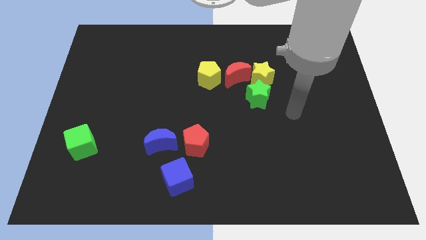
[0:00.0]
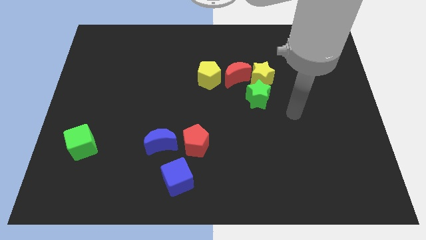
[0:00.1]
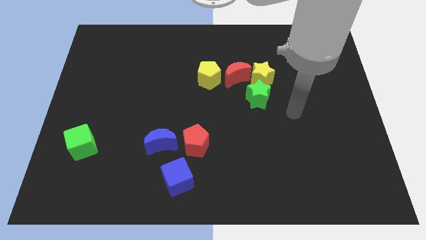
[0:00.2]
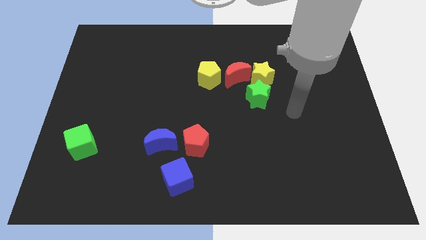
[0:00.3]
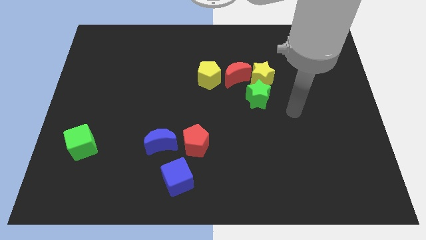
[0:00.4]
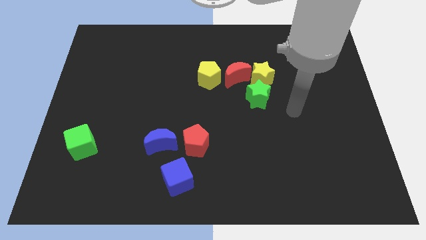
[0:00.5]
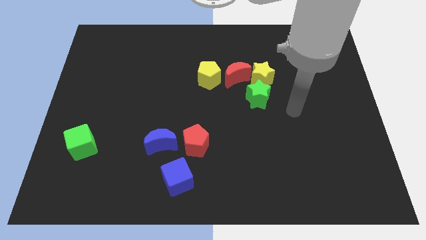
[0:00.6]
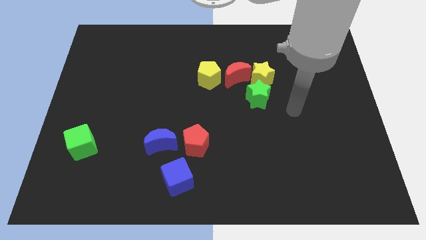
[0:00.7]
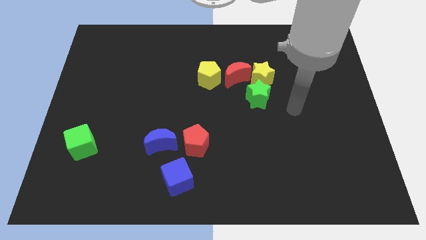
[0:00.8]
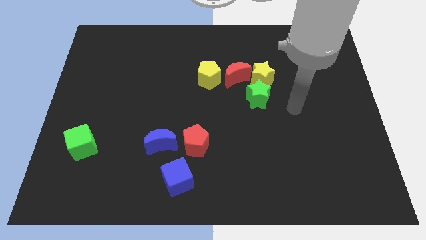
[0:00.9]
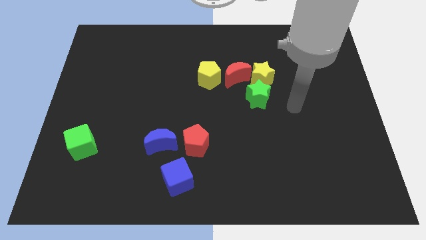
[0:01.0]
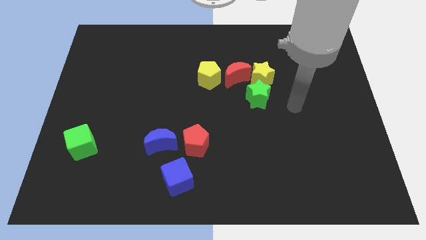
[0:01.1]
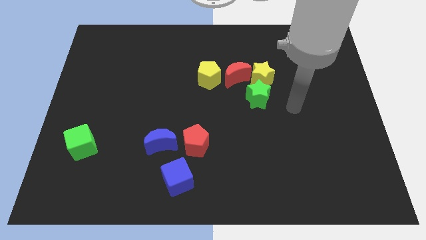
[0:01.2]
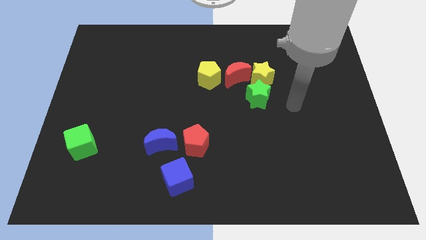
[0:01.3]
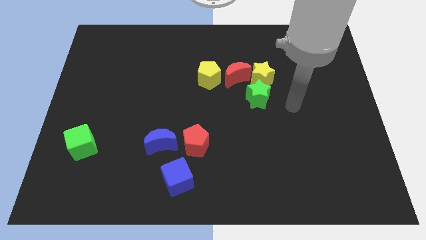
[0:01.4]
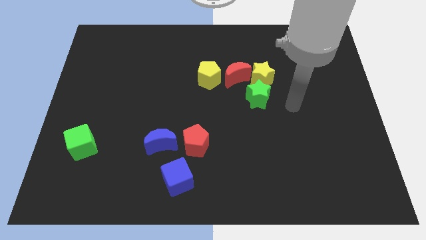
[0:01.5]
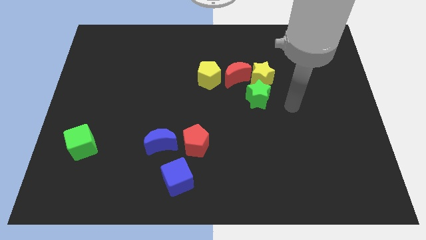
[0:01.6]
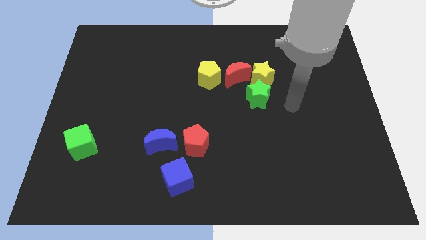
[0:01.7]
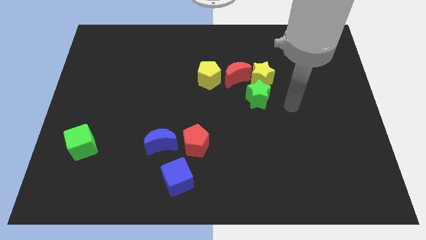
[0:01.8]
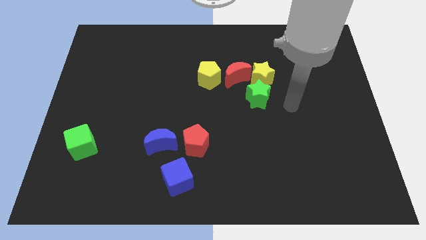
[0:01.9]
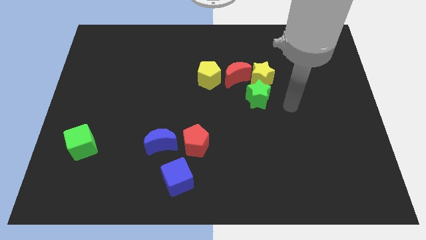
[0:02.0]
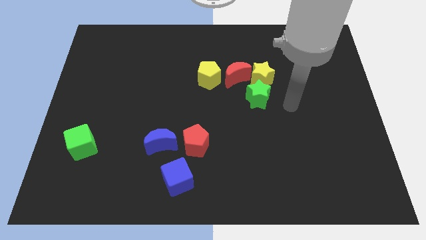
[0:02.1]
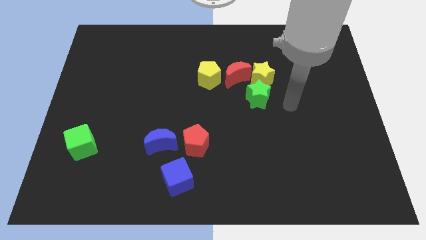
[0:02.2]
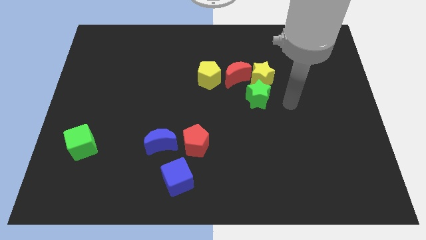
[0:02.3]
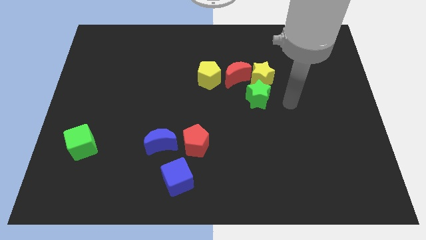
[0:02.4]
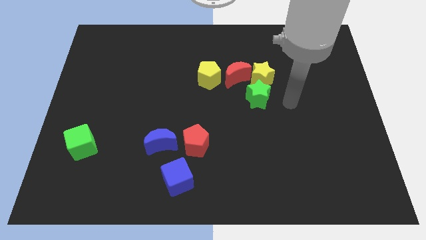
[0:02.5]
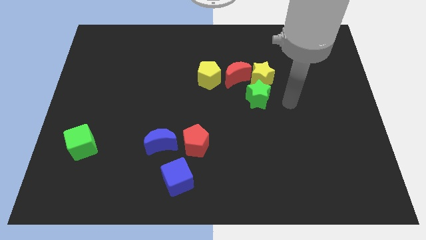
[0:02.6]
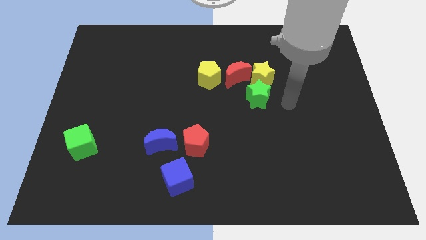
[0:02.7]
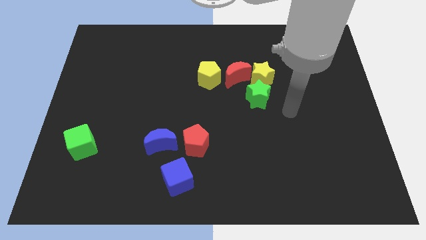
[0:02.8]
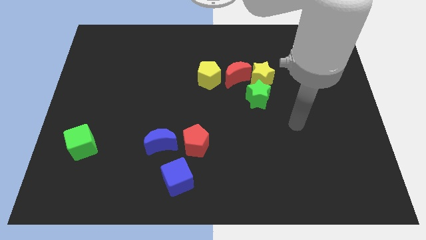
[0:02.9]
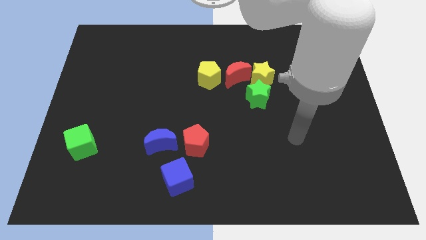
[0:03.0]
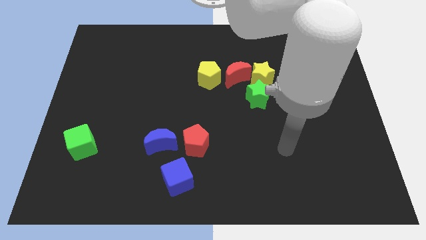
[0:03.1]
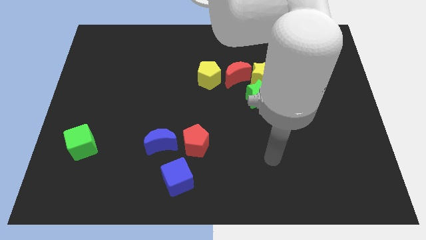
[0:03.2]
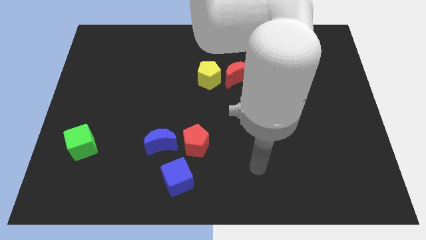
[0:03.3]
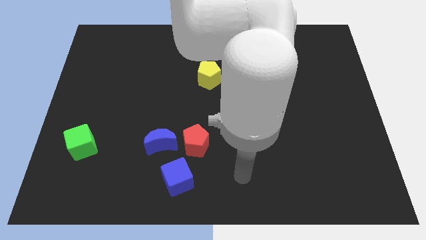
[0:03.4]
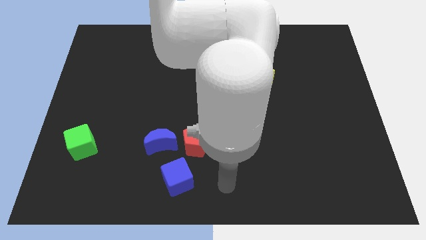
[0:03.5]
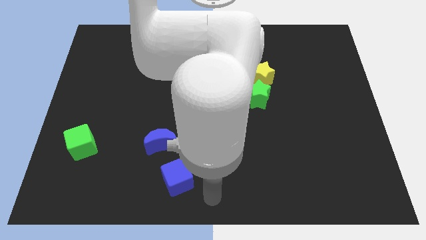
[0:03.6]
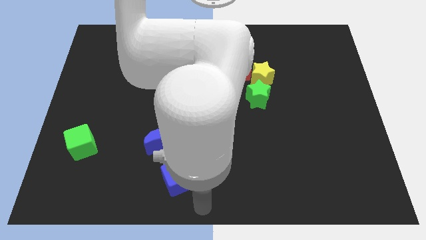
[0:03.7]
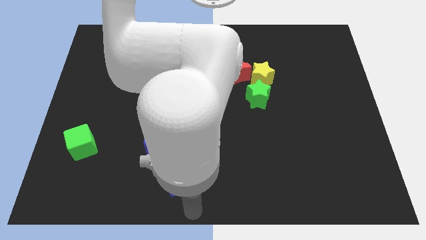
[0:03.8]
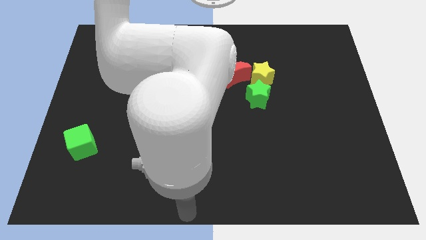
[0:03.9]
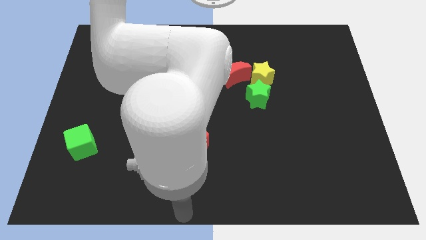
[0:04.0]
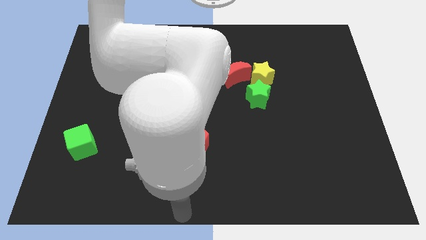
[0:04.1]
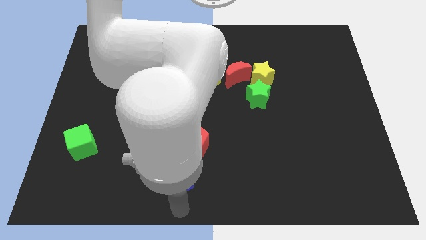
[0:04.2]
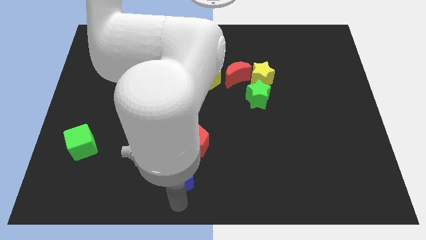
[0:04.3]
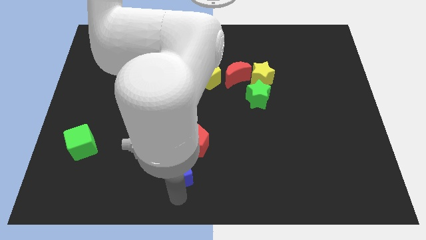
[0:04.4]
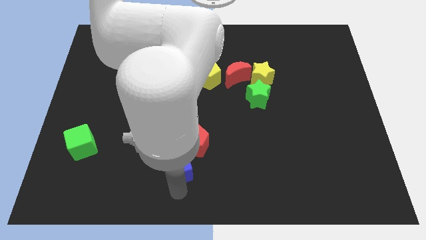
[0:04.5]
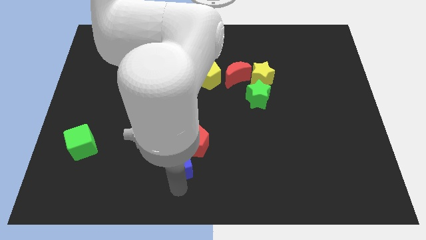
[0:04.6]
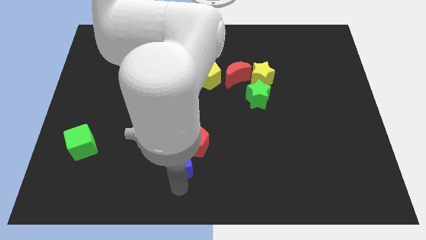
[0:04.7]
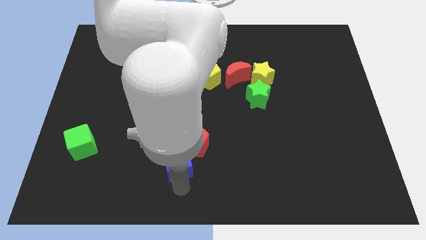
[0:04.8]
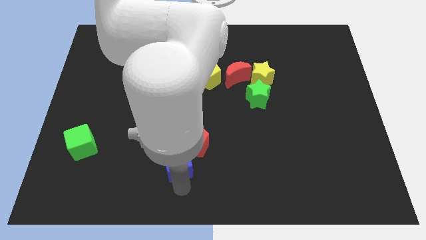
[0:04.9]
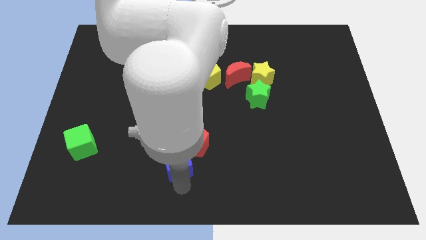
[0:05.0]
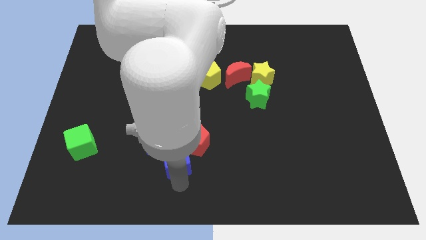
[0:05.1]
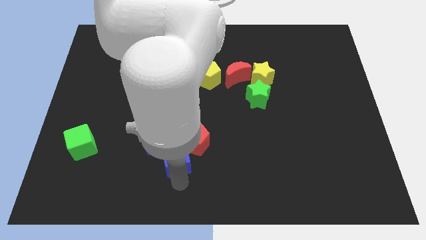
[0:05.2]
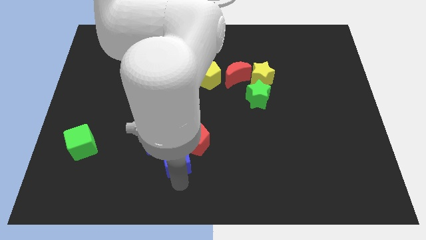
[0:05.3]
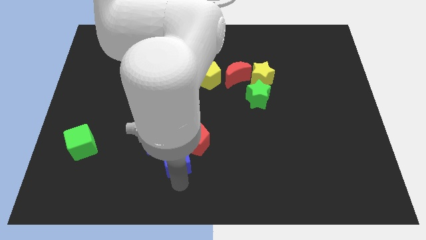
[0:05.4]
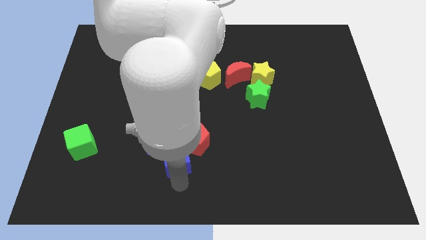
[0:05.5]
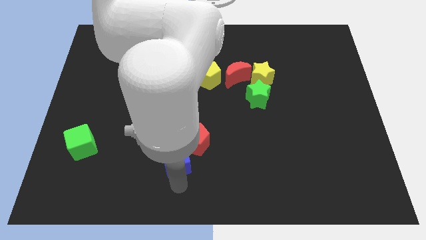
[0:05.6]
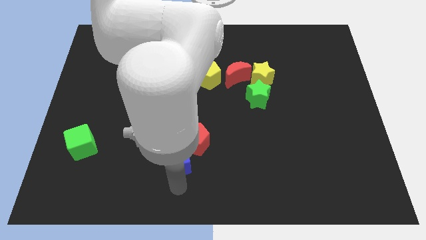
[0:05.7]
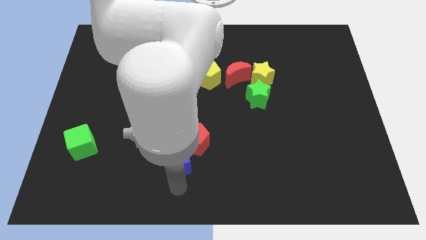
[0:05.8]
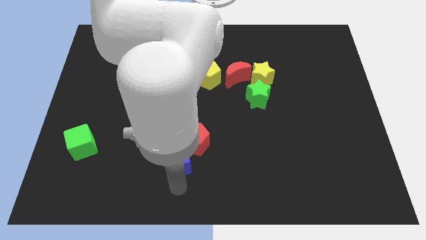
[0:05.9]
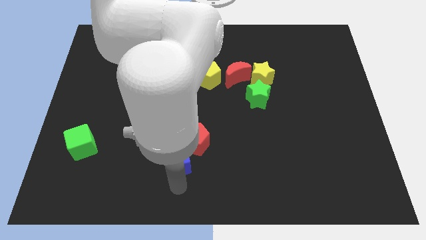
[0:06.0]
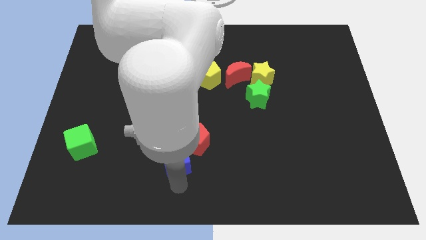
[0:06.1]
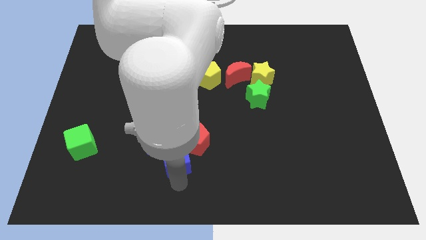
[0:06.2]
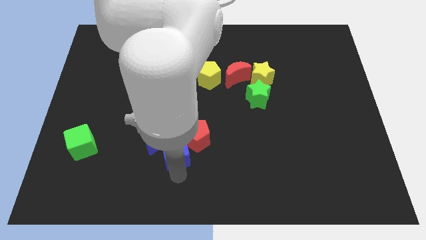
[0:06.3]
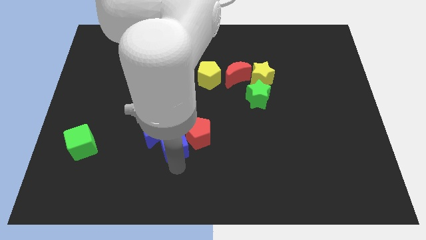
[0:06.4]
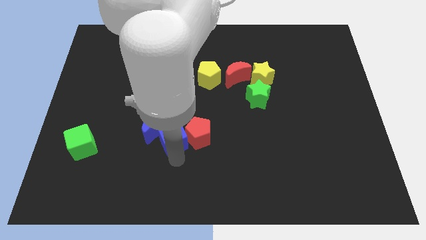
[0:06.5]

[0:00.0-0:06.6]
move the blue cube in between blue moon and red pentagon

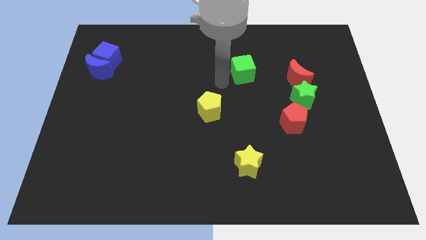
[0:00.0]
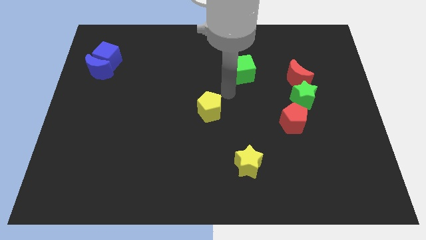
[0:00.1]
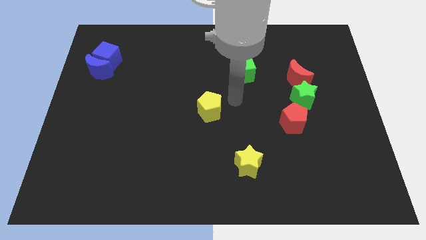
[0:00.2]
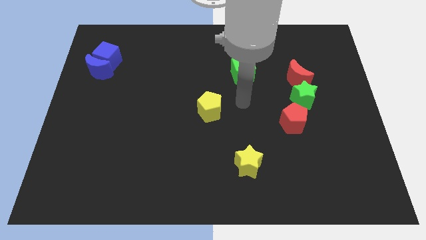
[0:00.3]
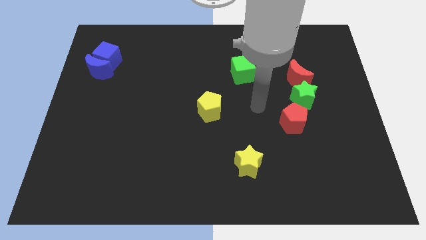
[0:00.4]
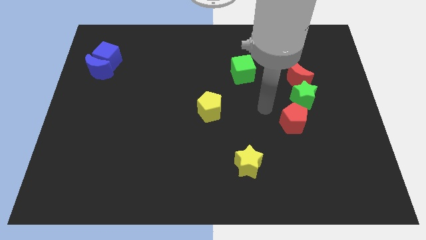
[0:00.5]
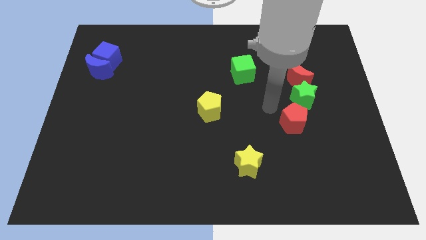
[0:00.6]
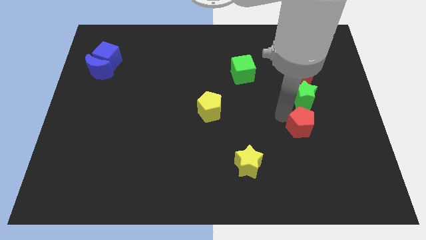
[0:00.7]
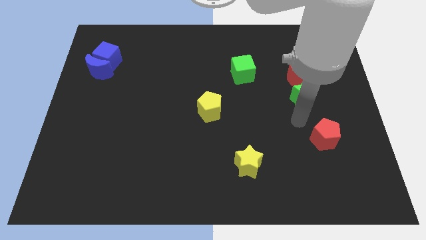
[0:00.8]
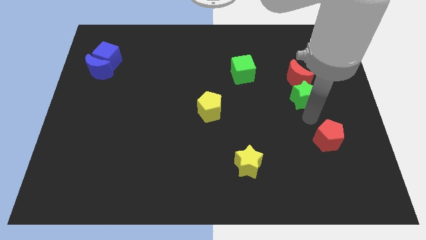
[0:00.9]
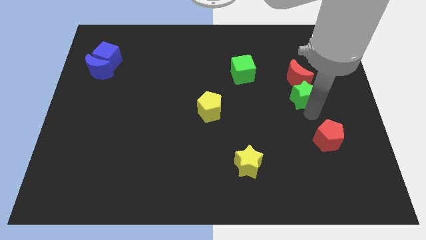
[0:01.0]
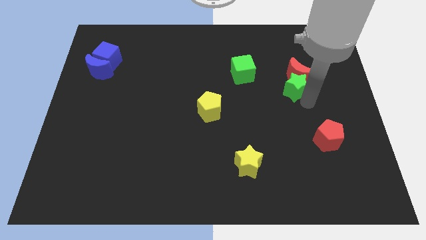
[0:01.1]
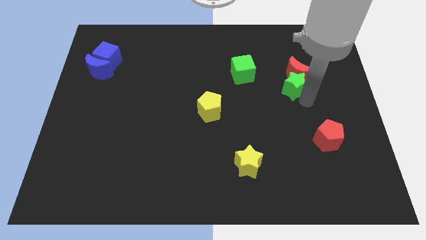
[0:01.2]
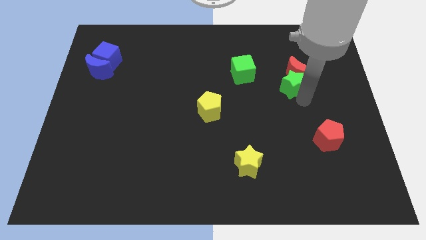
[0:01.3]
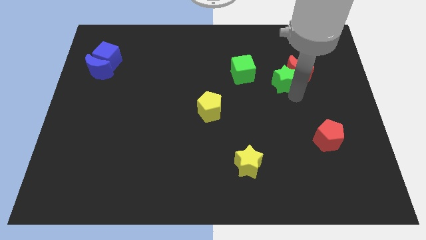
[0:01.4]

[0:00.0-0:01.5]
move the red pentagon away from the green star

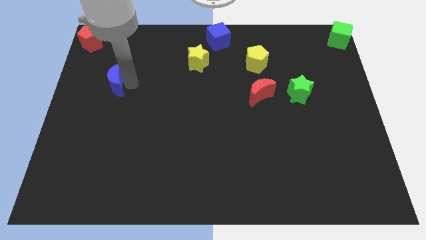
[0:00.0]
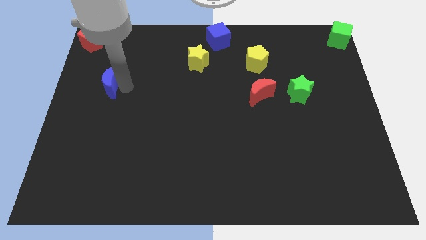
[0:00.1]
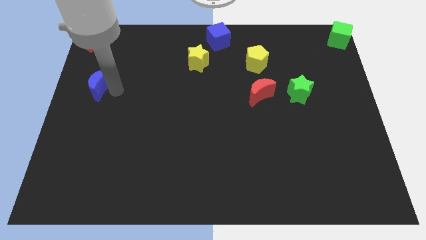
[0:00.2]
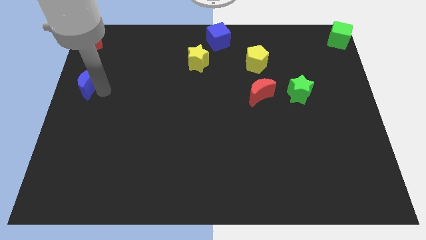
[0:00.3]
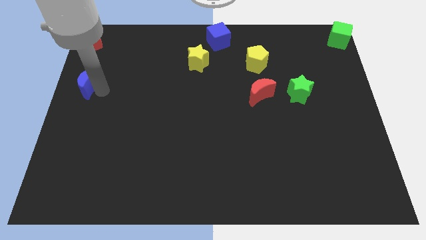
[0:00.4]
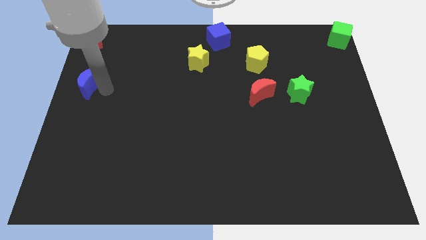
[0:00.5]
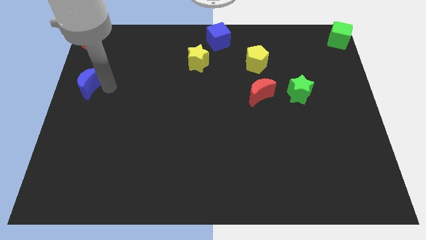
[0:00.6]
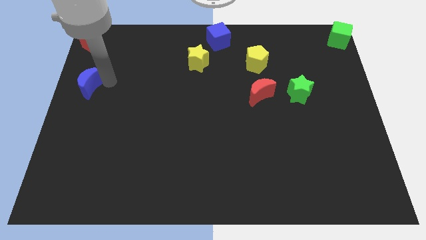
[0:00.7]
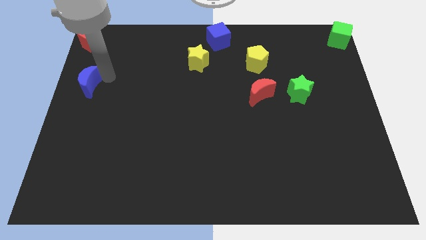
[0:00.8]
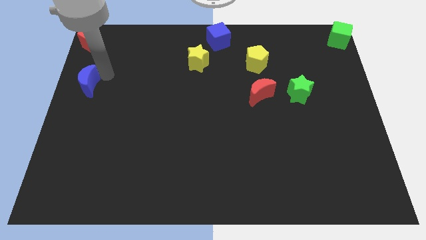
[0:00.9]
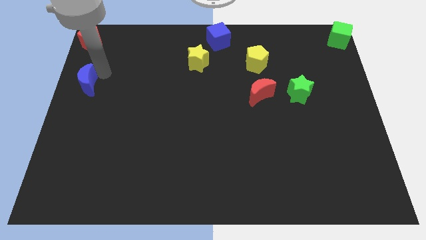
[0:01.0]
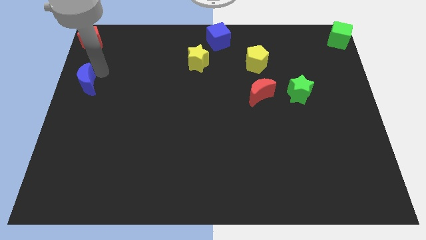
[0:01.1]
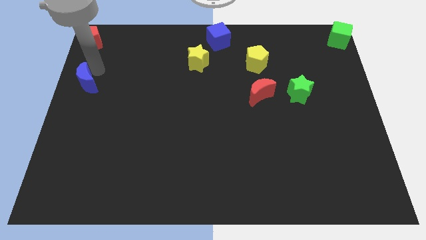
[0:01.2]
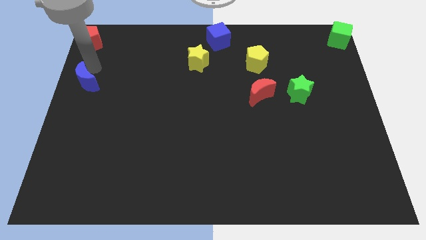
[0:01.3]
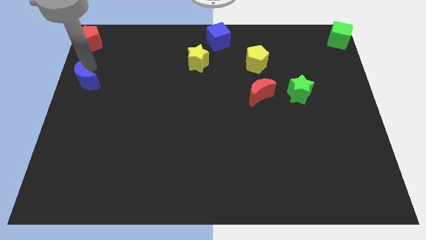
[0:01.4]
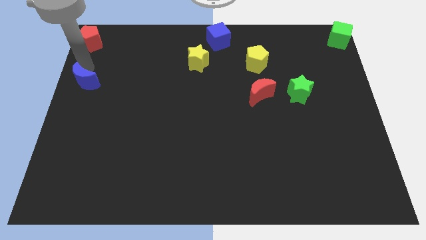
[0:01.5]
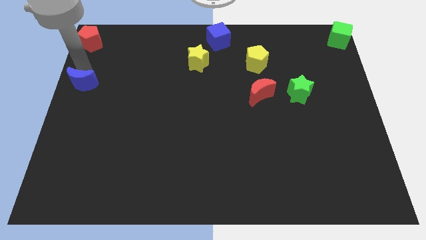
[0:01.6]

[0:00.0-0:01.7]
move blue crescent vertically to the red pentagon
